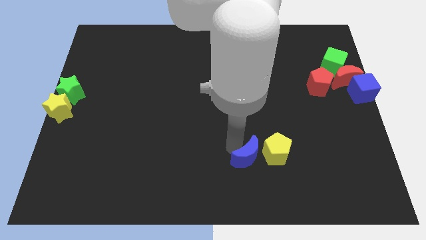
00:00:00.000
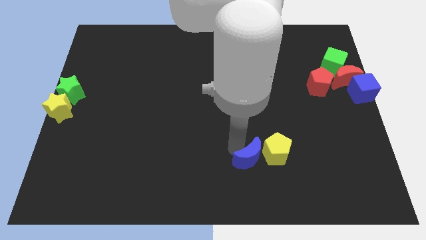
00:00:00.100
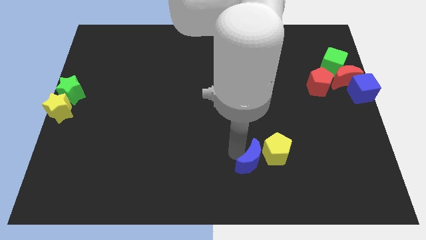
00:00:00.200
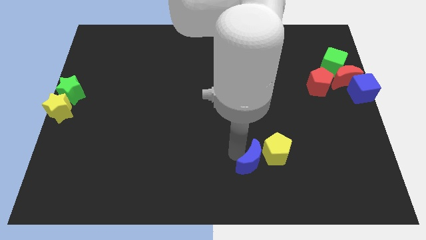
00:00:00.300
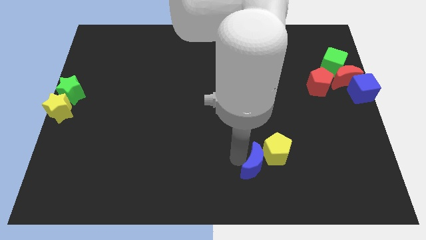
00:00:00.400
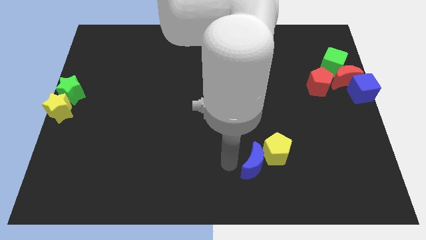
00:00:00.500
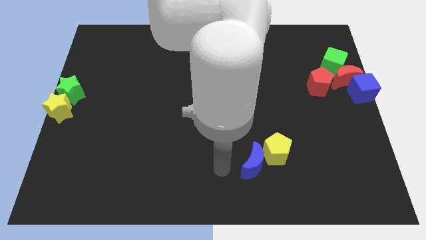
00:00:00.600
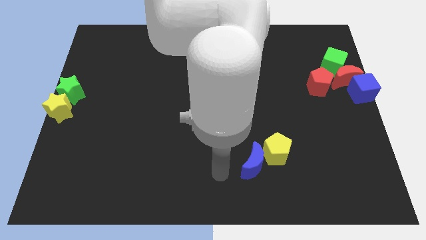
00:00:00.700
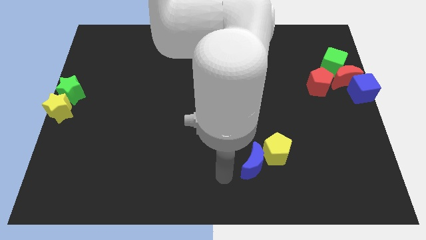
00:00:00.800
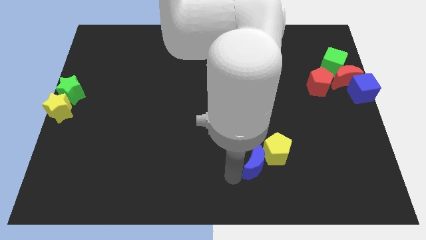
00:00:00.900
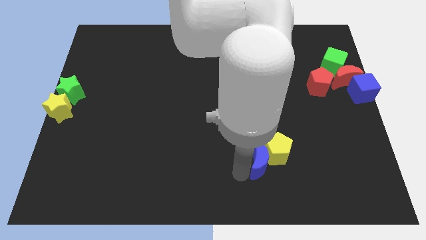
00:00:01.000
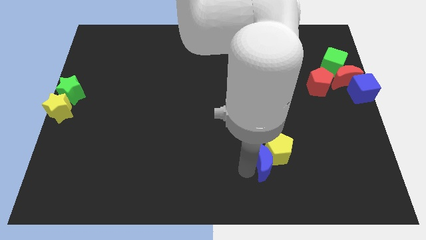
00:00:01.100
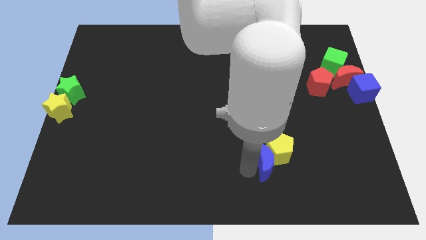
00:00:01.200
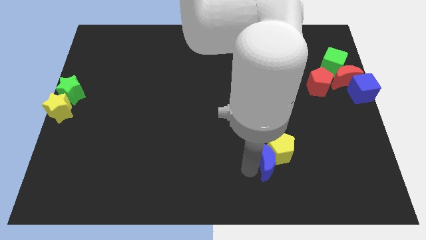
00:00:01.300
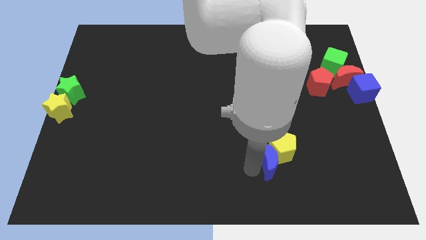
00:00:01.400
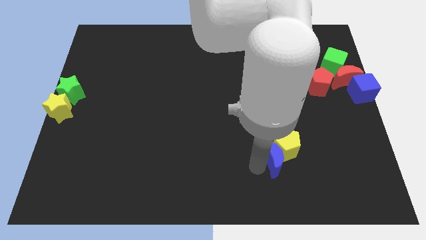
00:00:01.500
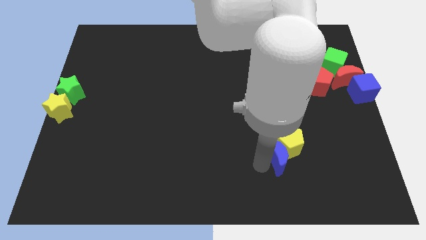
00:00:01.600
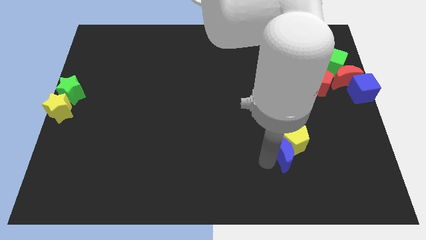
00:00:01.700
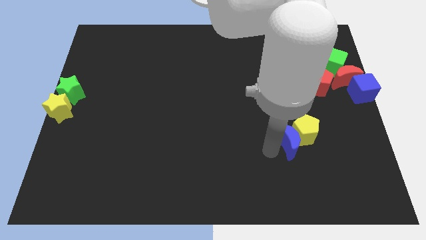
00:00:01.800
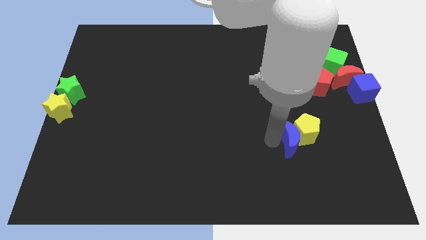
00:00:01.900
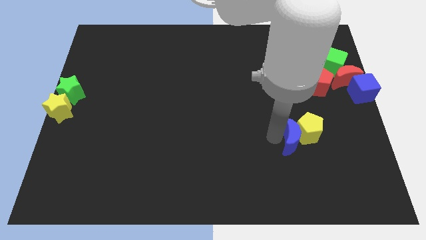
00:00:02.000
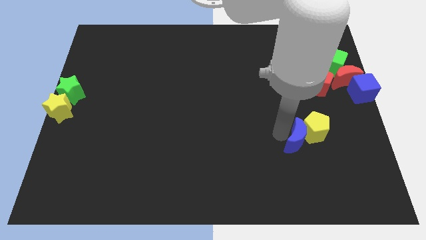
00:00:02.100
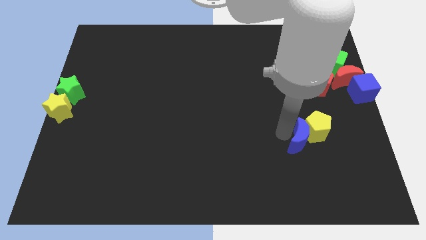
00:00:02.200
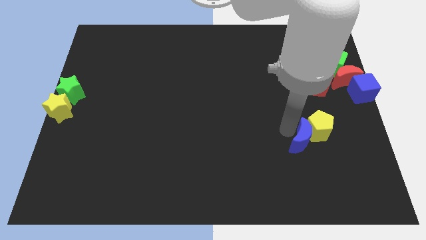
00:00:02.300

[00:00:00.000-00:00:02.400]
push the blue moon and yellow pentagon slightly upwards

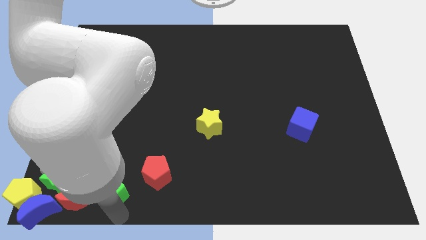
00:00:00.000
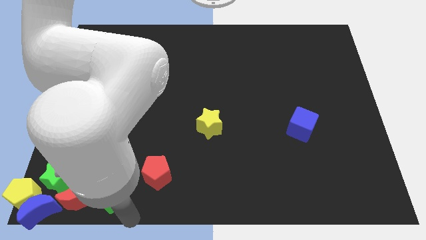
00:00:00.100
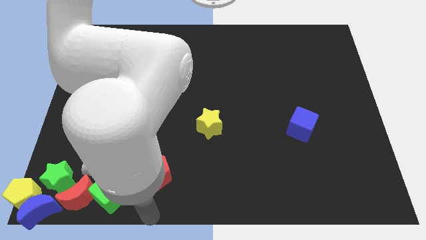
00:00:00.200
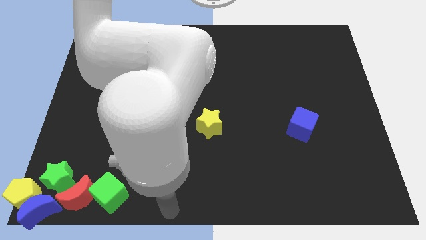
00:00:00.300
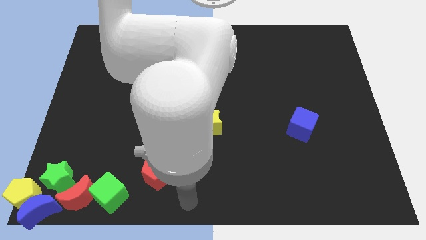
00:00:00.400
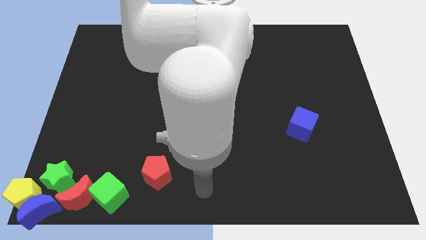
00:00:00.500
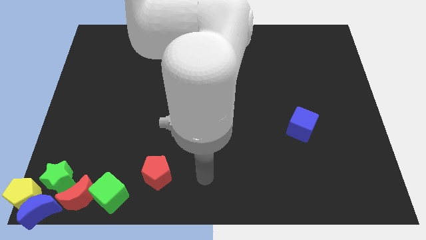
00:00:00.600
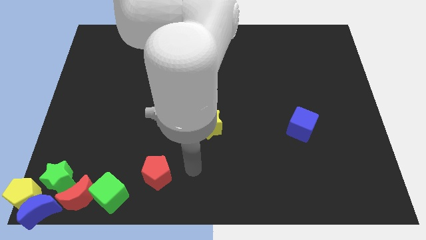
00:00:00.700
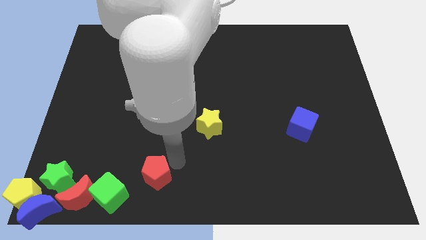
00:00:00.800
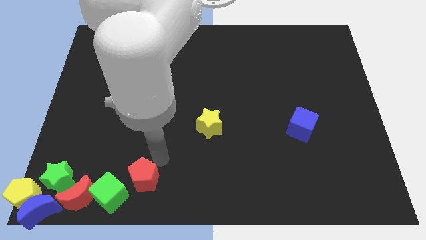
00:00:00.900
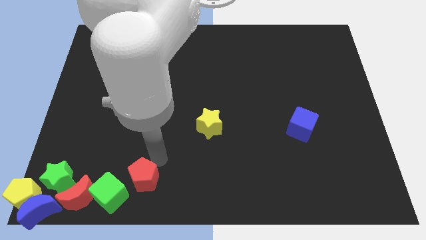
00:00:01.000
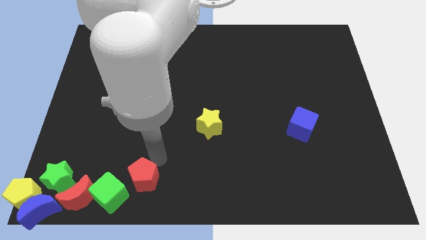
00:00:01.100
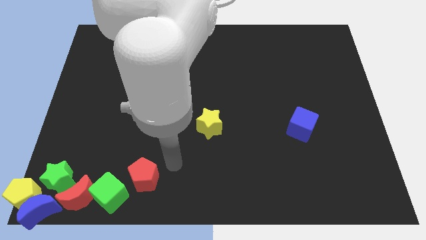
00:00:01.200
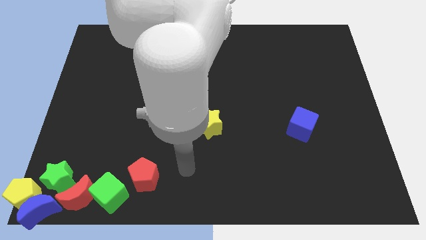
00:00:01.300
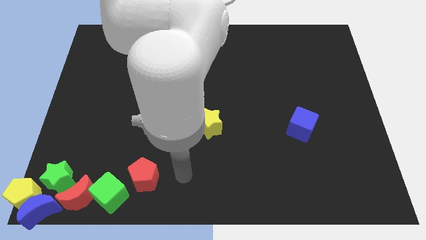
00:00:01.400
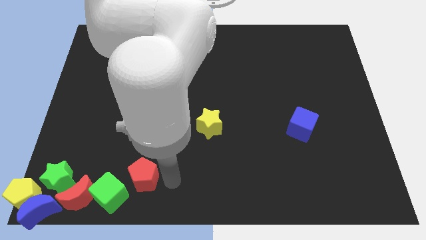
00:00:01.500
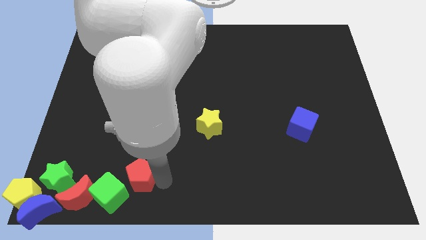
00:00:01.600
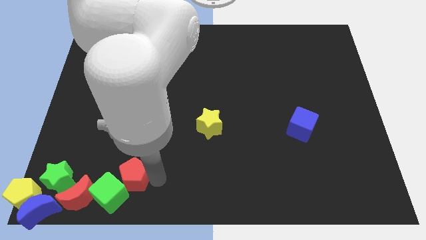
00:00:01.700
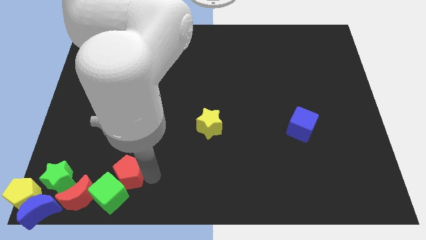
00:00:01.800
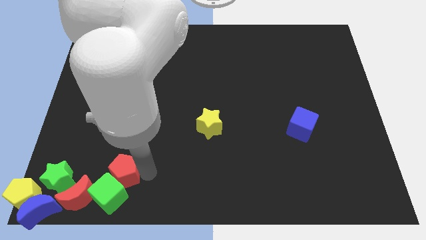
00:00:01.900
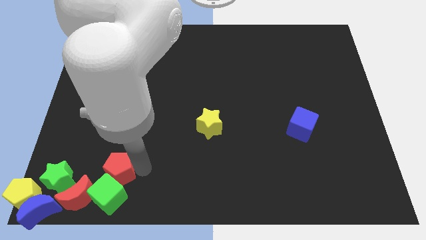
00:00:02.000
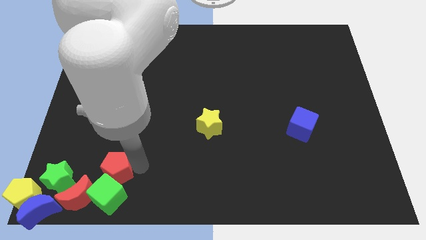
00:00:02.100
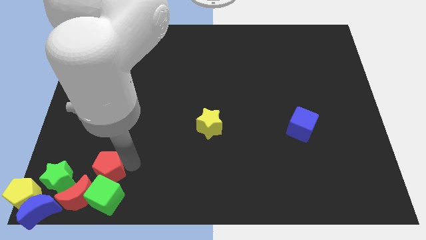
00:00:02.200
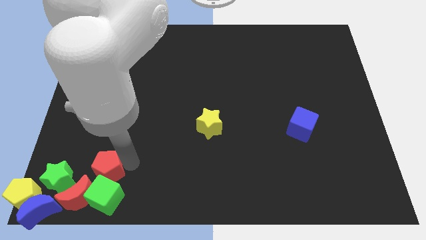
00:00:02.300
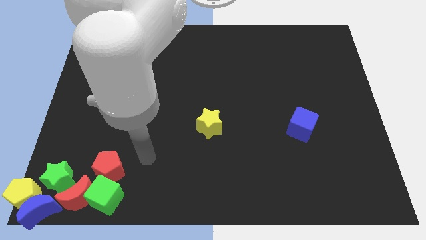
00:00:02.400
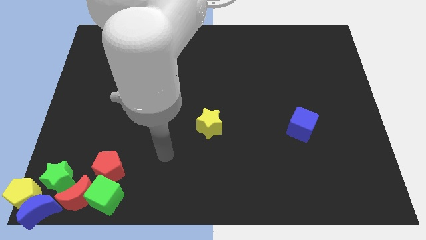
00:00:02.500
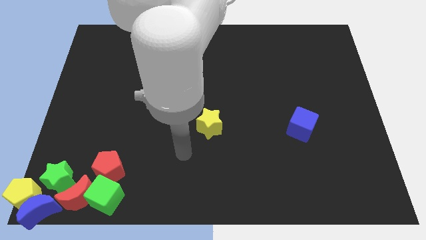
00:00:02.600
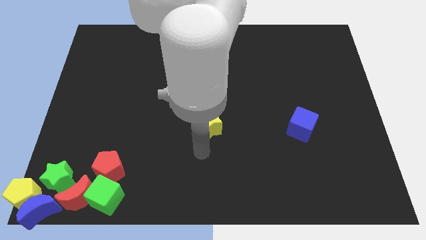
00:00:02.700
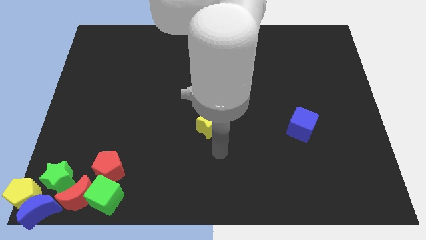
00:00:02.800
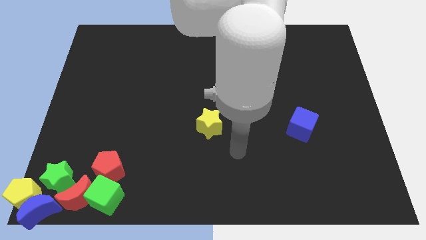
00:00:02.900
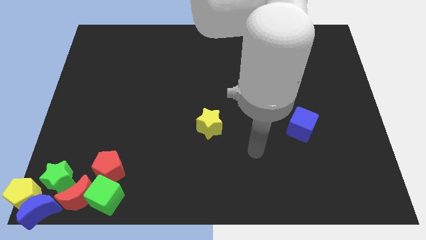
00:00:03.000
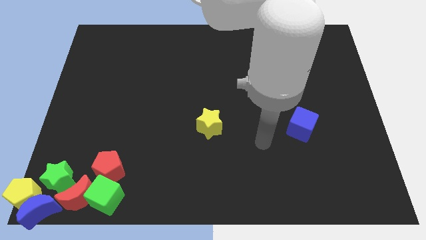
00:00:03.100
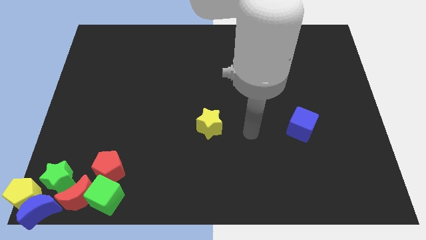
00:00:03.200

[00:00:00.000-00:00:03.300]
put the red pentagon at the top of the green cube

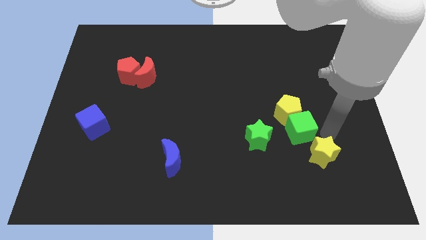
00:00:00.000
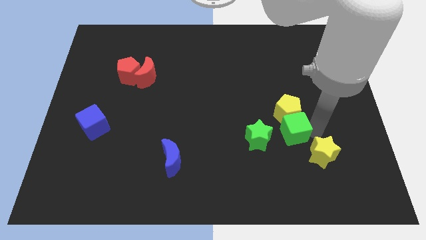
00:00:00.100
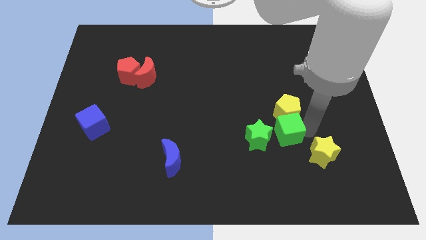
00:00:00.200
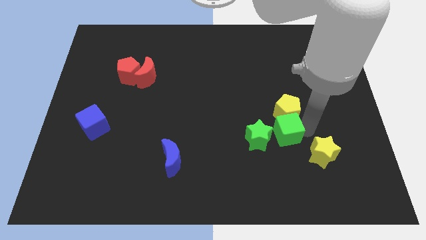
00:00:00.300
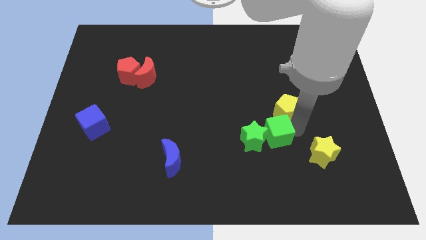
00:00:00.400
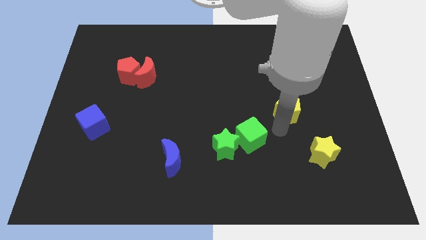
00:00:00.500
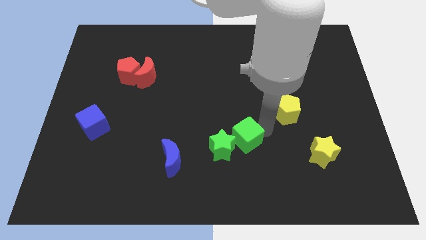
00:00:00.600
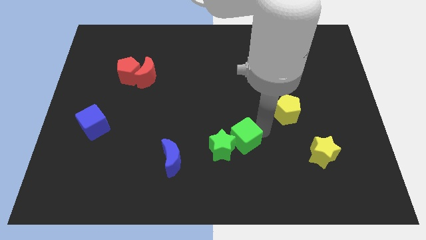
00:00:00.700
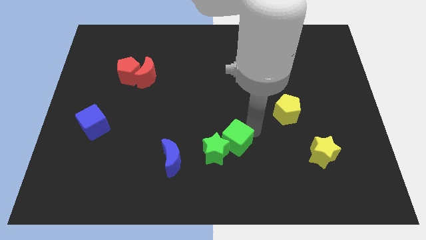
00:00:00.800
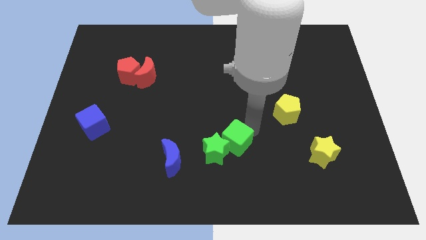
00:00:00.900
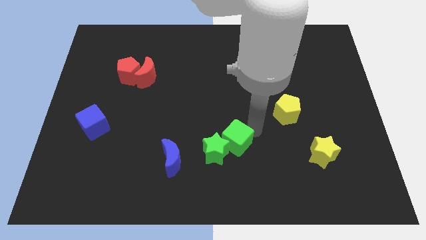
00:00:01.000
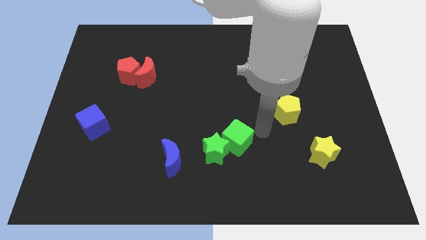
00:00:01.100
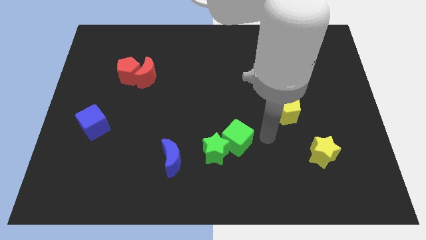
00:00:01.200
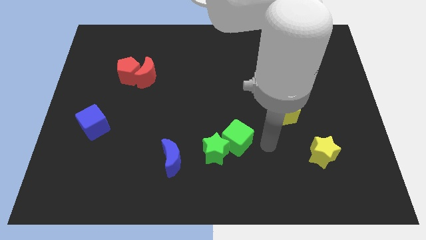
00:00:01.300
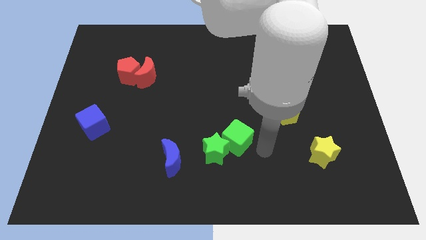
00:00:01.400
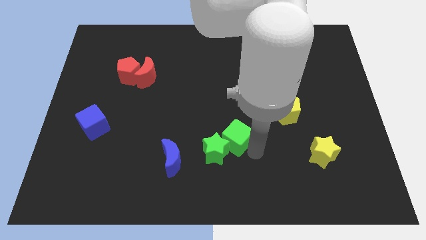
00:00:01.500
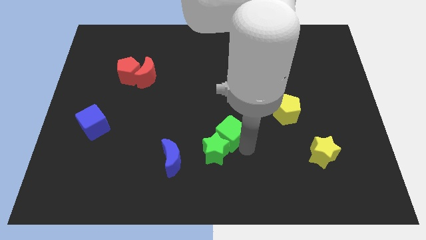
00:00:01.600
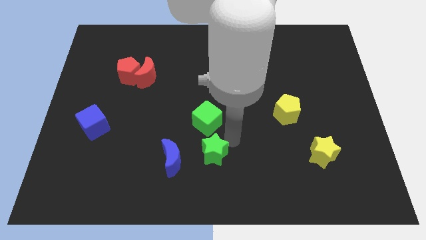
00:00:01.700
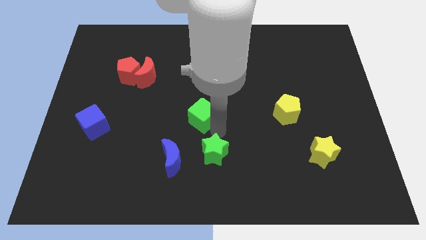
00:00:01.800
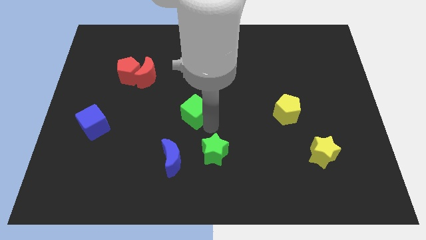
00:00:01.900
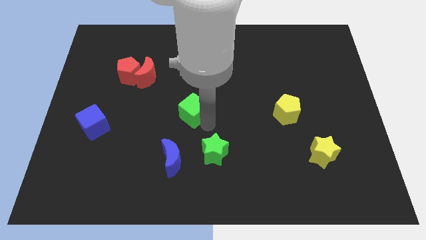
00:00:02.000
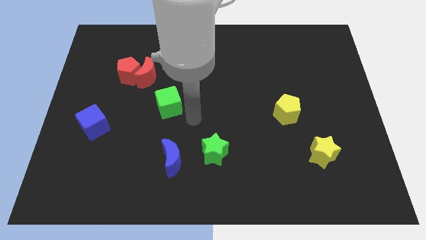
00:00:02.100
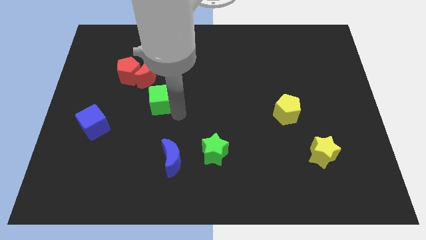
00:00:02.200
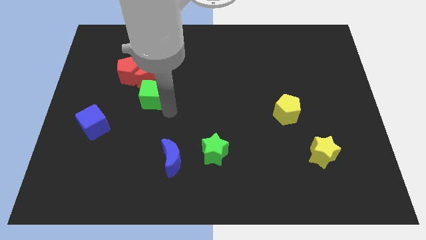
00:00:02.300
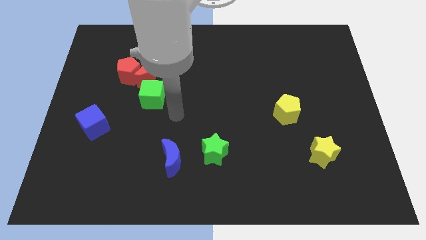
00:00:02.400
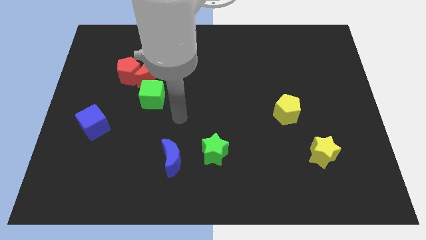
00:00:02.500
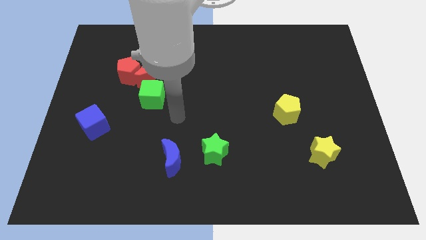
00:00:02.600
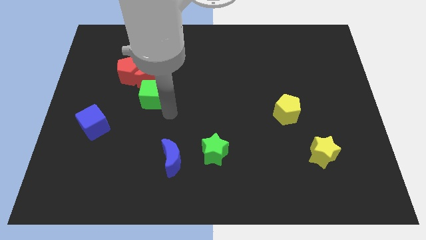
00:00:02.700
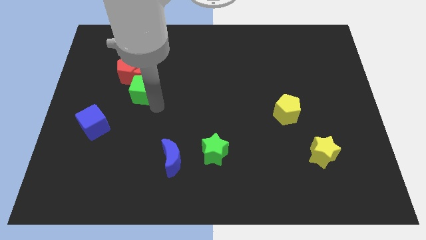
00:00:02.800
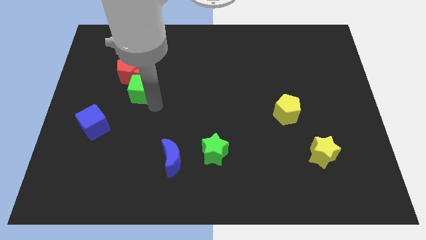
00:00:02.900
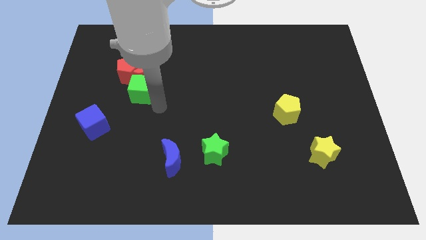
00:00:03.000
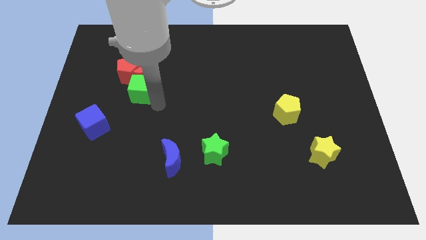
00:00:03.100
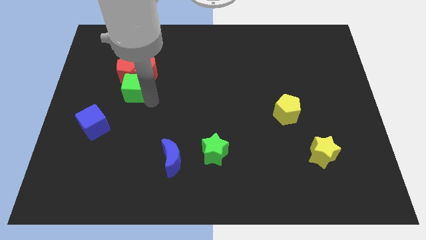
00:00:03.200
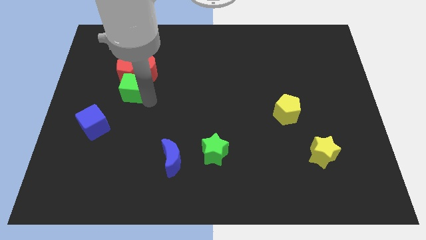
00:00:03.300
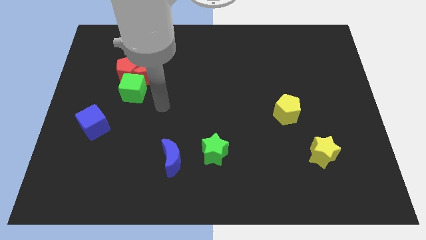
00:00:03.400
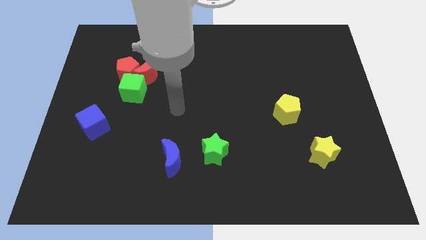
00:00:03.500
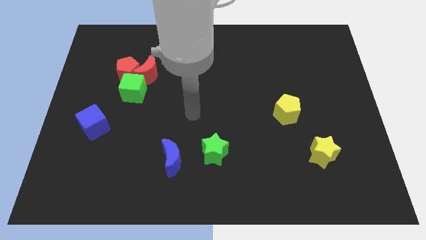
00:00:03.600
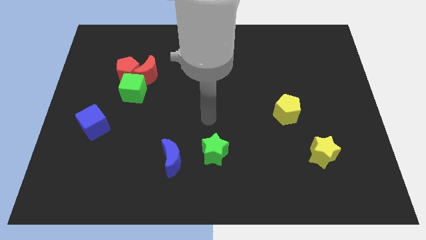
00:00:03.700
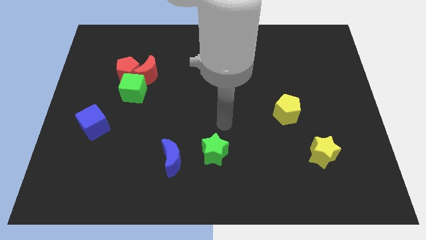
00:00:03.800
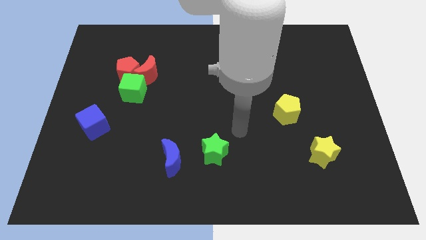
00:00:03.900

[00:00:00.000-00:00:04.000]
move green cube below red blocks
